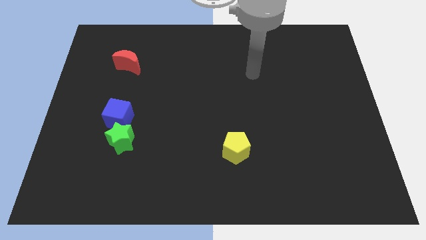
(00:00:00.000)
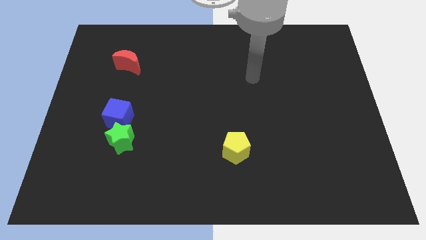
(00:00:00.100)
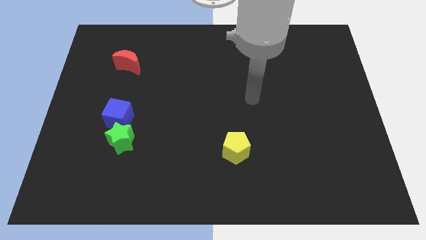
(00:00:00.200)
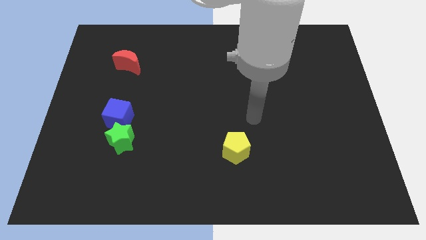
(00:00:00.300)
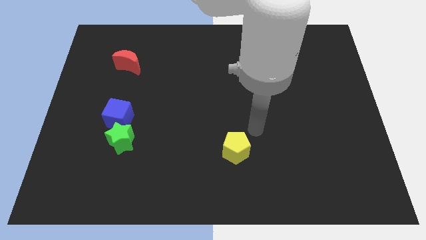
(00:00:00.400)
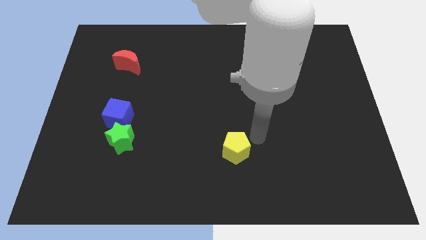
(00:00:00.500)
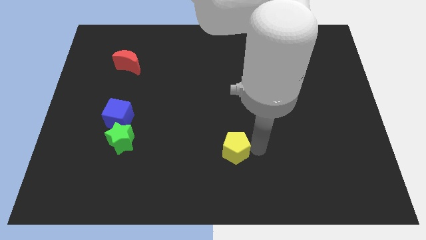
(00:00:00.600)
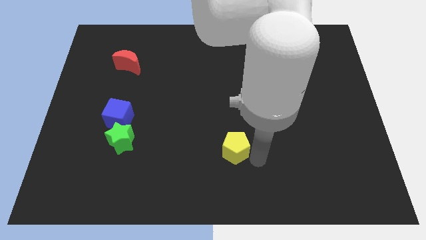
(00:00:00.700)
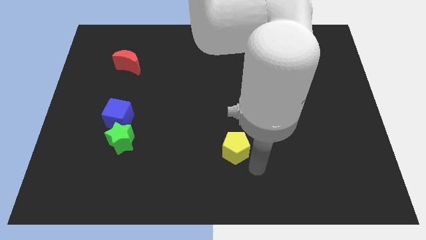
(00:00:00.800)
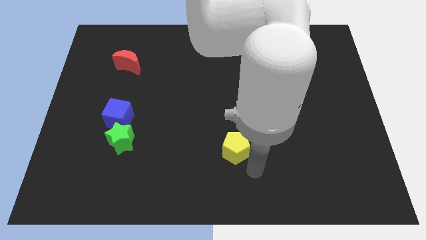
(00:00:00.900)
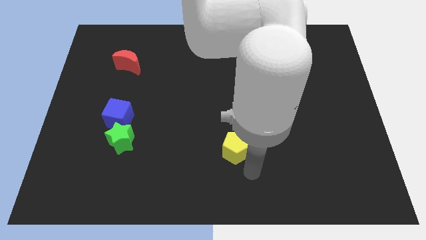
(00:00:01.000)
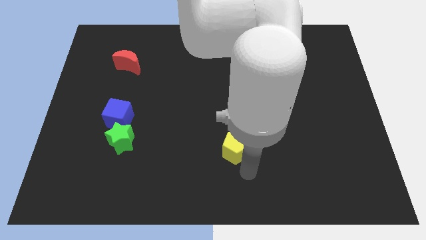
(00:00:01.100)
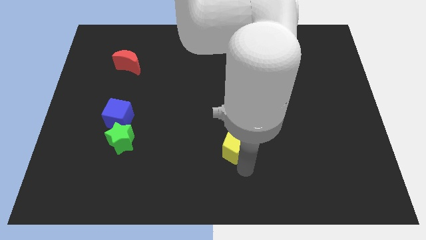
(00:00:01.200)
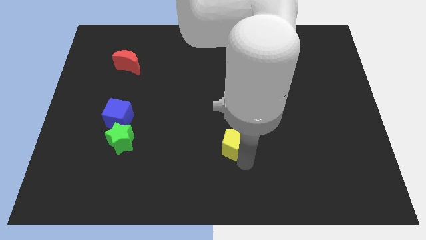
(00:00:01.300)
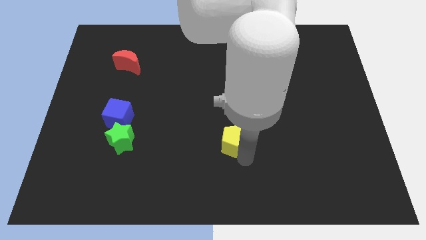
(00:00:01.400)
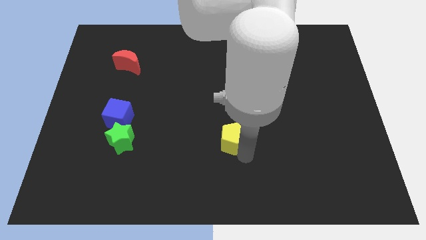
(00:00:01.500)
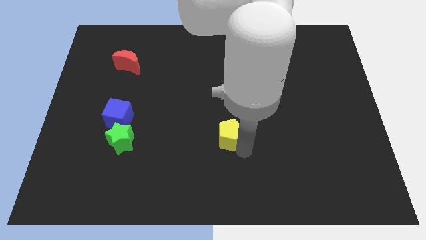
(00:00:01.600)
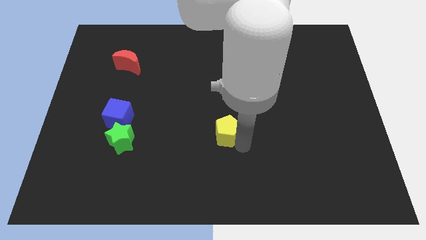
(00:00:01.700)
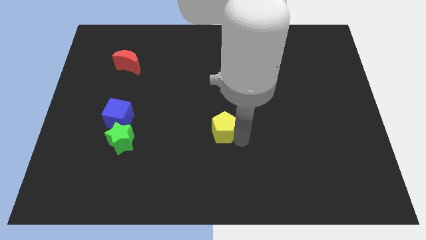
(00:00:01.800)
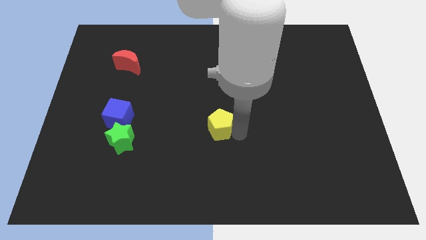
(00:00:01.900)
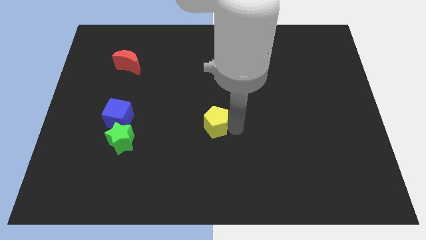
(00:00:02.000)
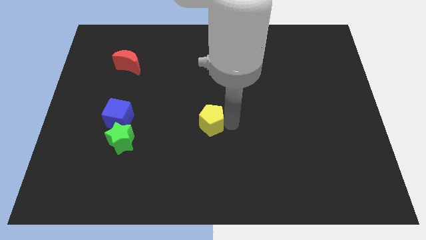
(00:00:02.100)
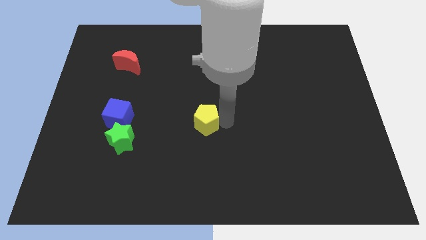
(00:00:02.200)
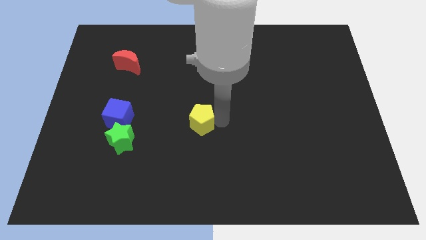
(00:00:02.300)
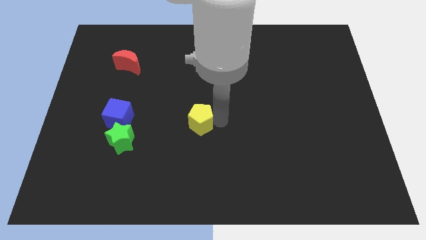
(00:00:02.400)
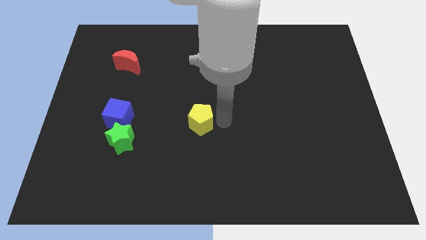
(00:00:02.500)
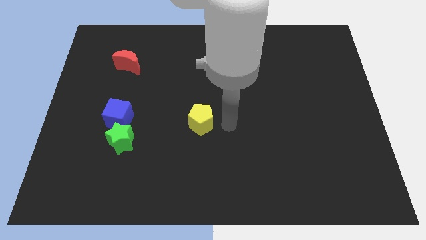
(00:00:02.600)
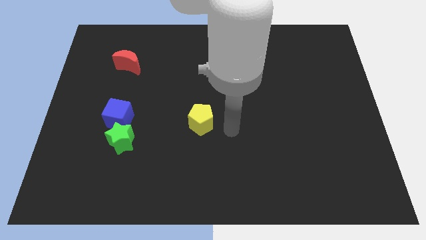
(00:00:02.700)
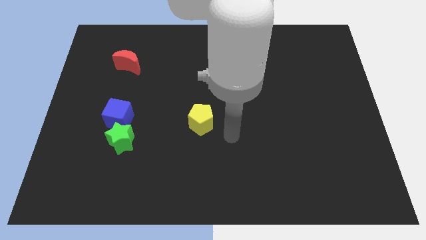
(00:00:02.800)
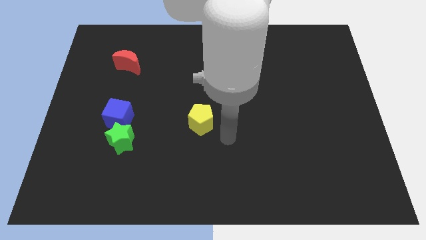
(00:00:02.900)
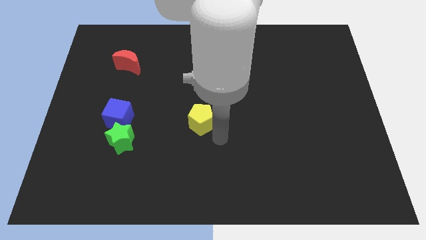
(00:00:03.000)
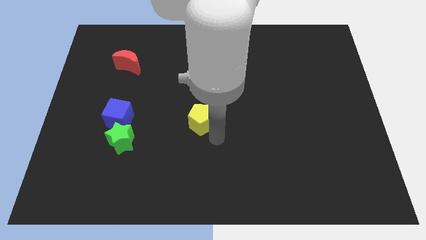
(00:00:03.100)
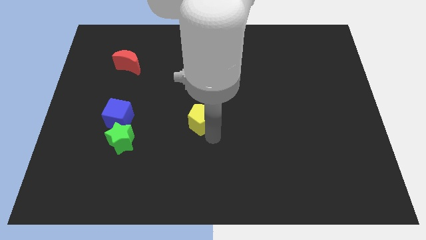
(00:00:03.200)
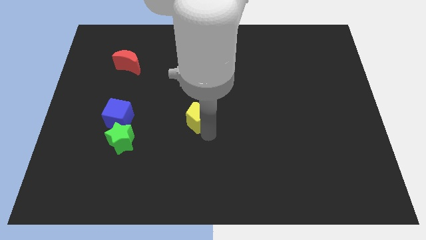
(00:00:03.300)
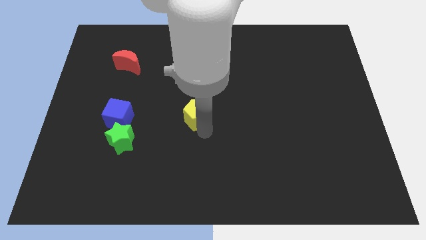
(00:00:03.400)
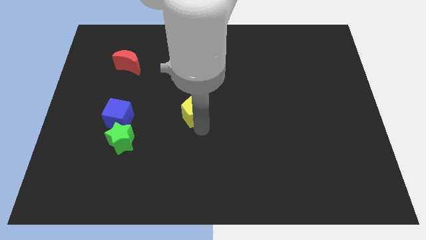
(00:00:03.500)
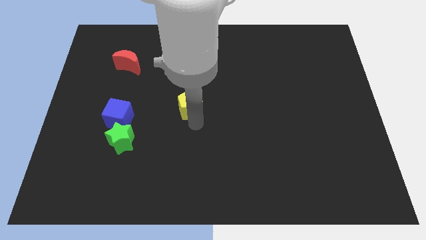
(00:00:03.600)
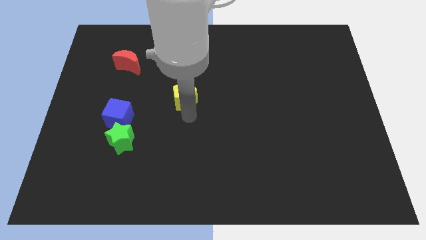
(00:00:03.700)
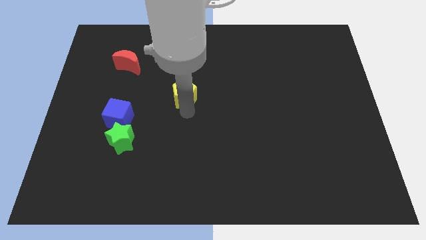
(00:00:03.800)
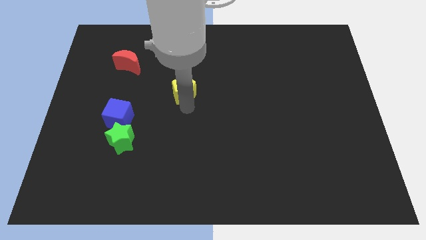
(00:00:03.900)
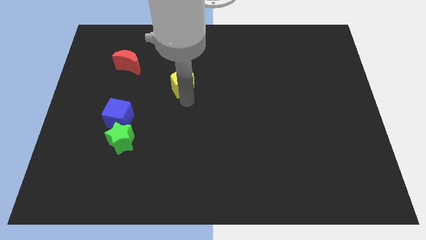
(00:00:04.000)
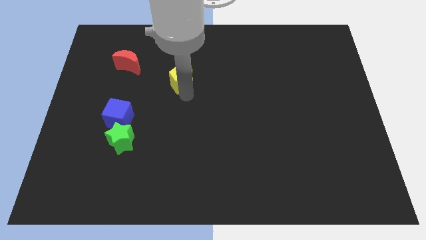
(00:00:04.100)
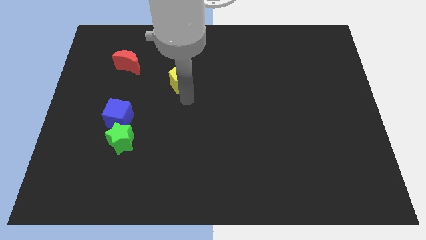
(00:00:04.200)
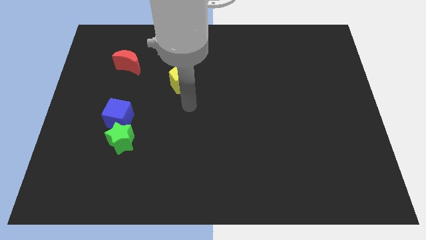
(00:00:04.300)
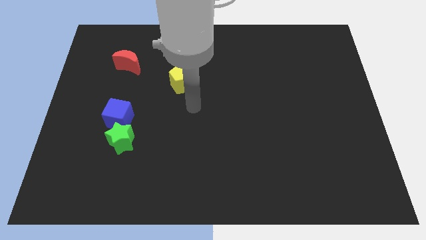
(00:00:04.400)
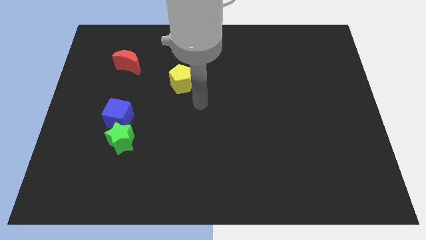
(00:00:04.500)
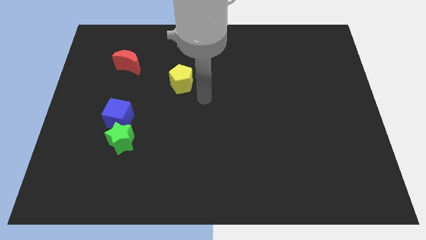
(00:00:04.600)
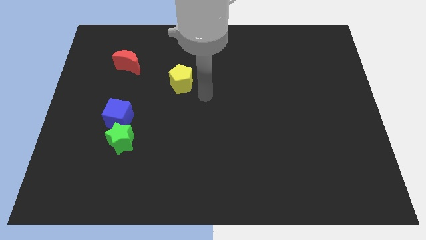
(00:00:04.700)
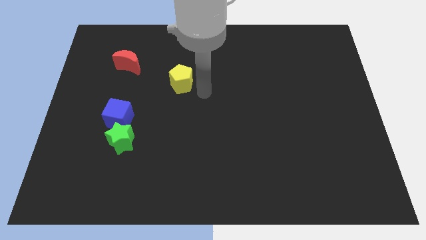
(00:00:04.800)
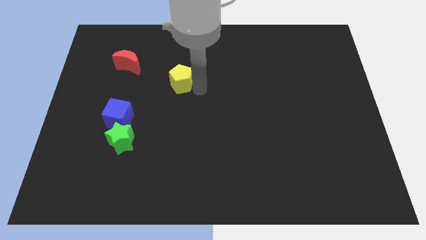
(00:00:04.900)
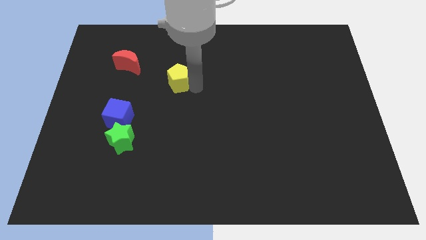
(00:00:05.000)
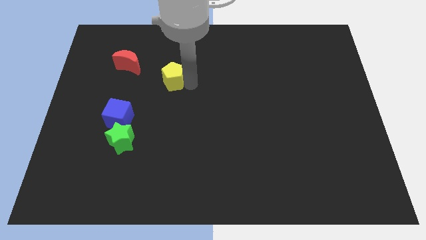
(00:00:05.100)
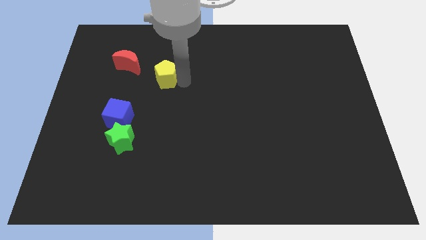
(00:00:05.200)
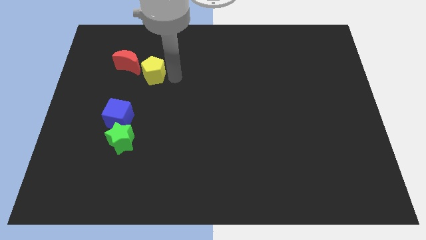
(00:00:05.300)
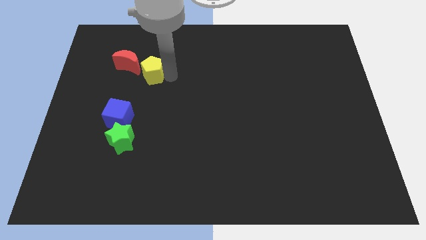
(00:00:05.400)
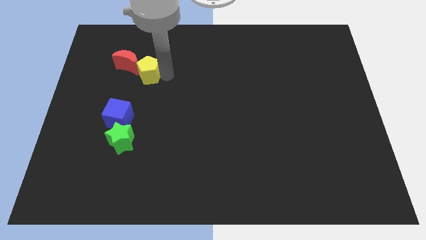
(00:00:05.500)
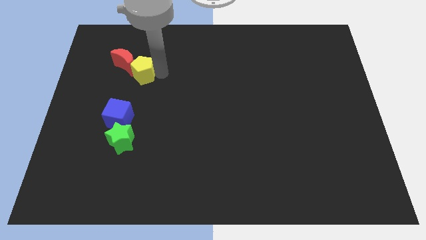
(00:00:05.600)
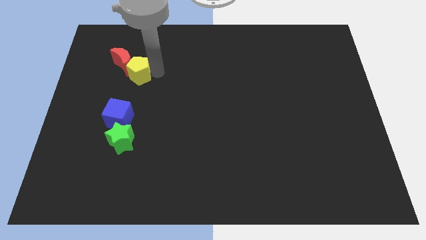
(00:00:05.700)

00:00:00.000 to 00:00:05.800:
push the yellow block to the red block

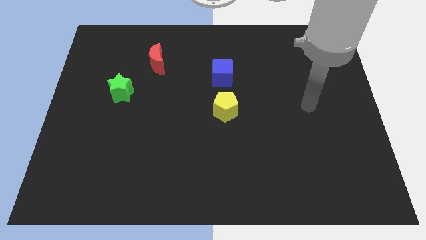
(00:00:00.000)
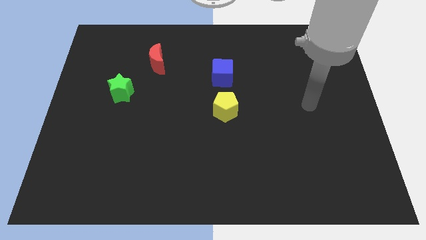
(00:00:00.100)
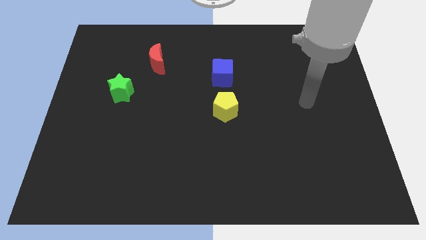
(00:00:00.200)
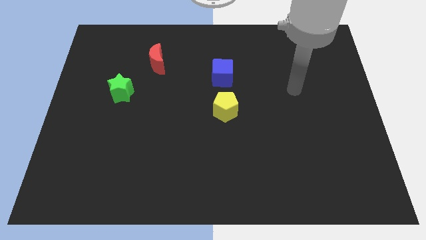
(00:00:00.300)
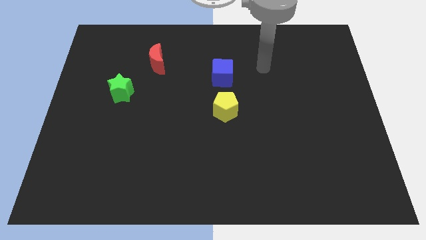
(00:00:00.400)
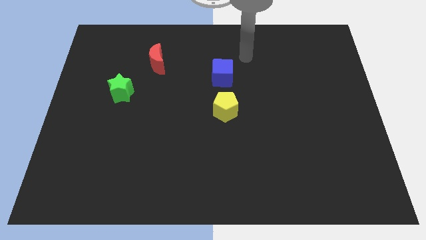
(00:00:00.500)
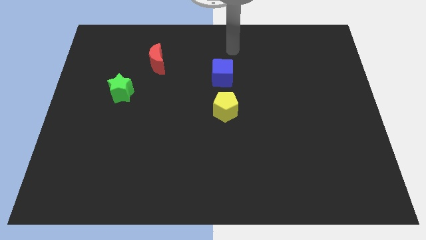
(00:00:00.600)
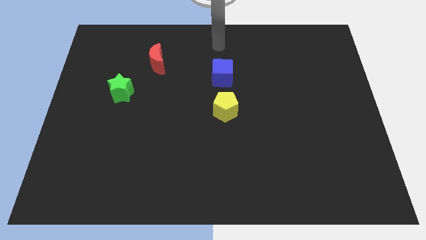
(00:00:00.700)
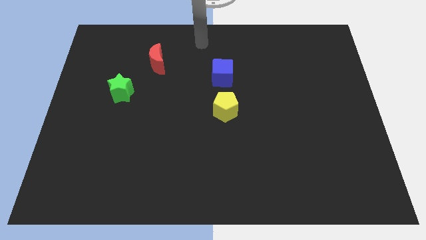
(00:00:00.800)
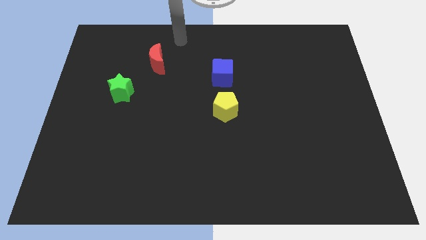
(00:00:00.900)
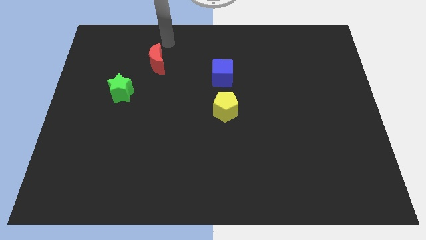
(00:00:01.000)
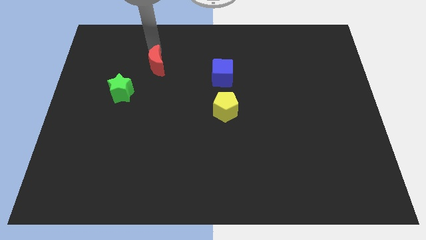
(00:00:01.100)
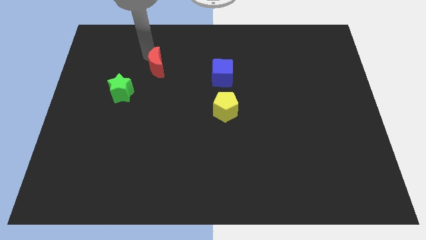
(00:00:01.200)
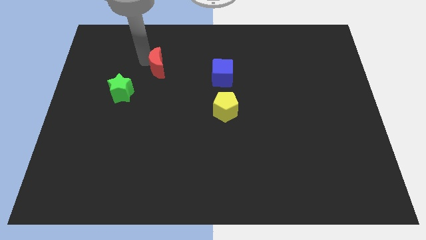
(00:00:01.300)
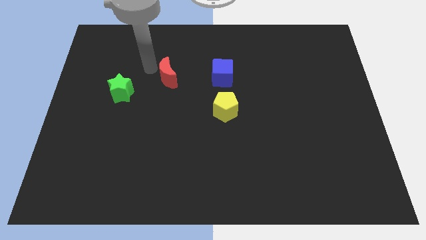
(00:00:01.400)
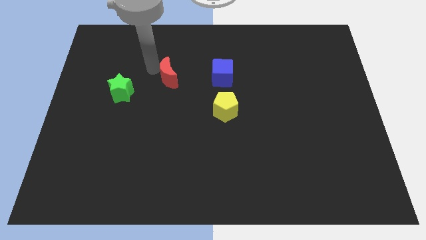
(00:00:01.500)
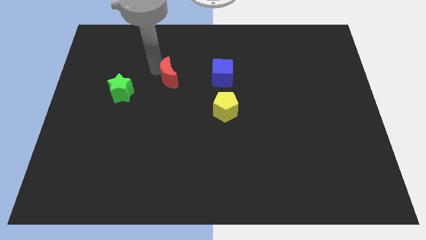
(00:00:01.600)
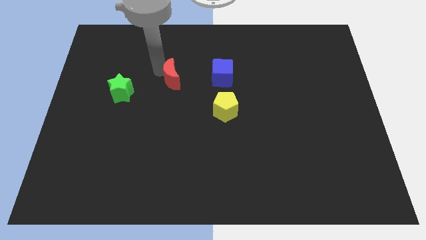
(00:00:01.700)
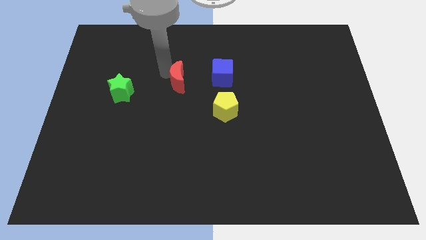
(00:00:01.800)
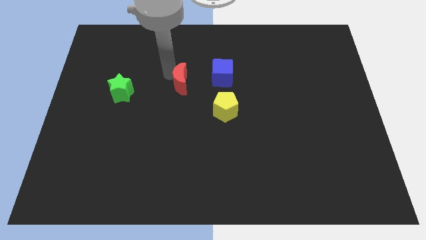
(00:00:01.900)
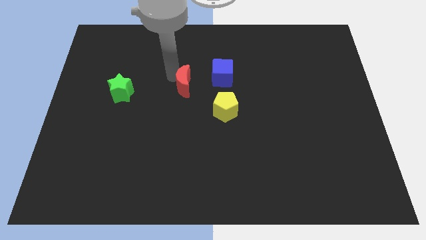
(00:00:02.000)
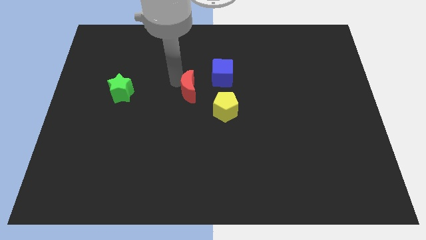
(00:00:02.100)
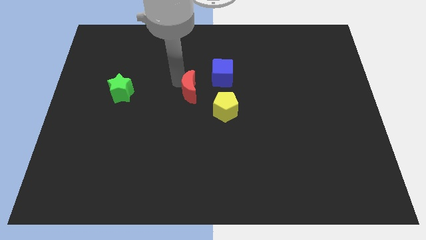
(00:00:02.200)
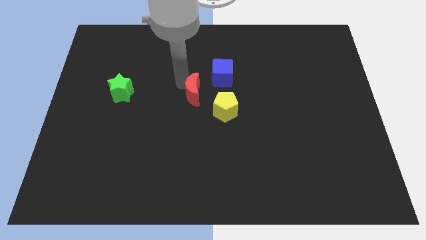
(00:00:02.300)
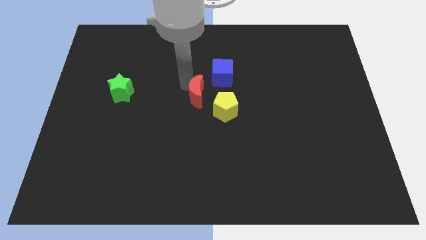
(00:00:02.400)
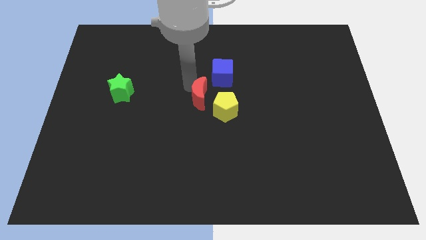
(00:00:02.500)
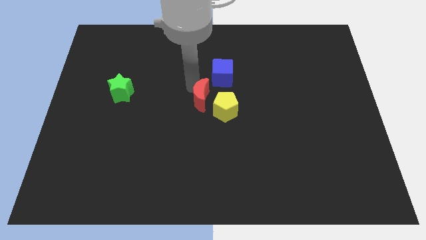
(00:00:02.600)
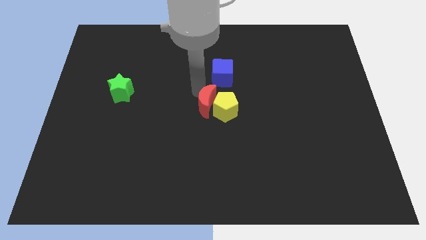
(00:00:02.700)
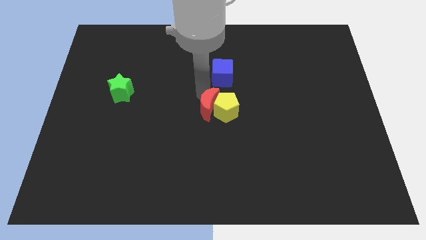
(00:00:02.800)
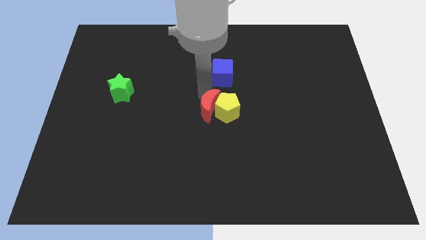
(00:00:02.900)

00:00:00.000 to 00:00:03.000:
put the red moon next to the yellow block
